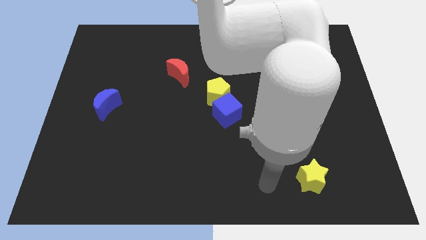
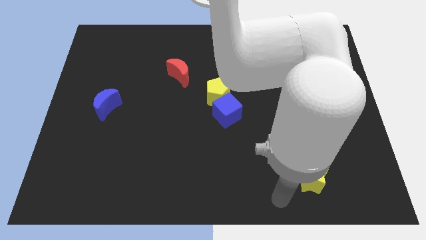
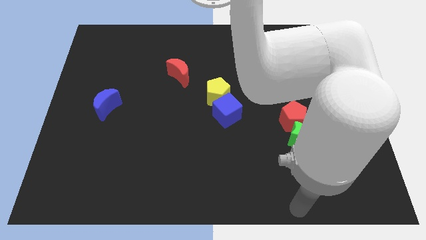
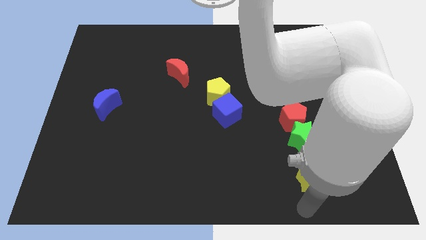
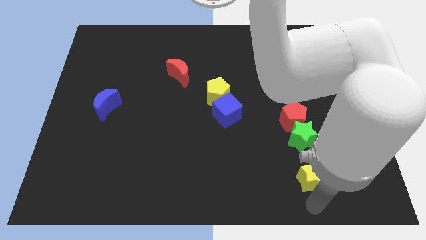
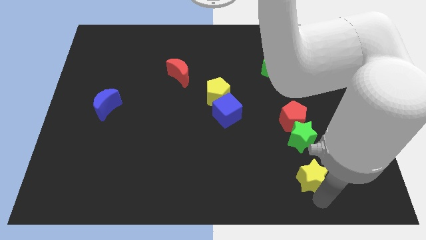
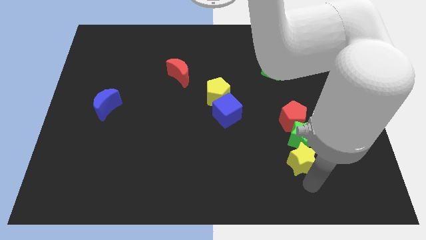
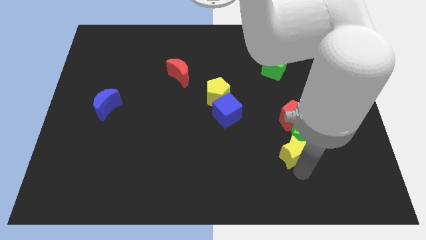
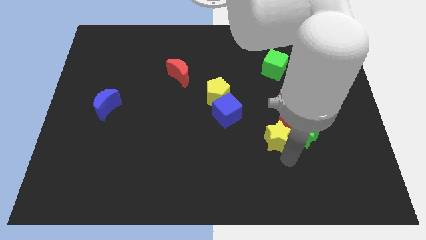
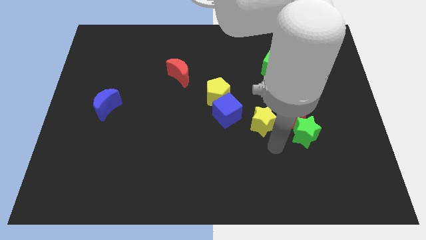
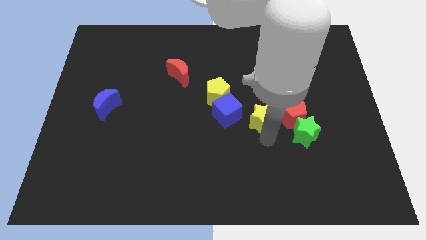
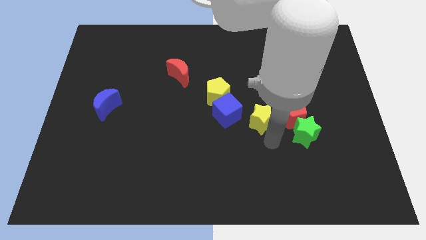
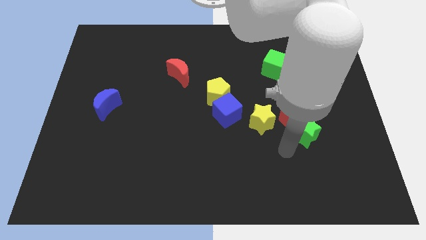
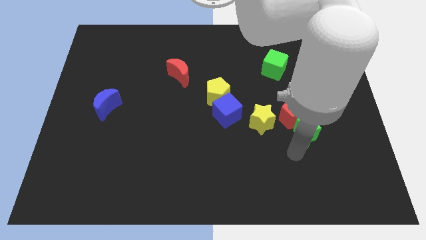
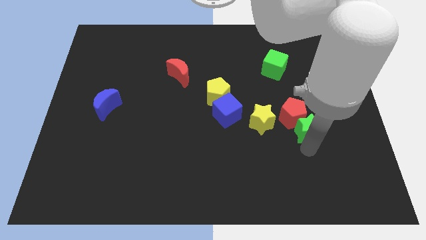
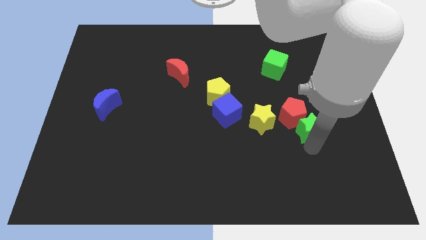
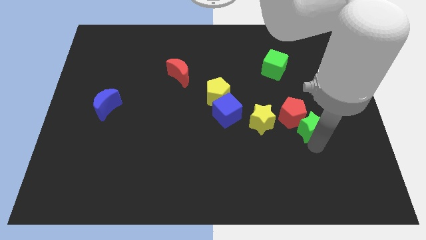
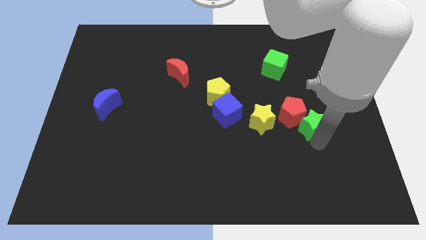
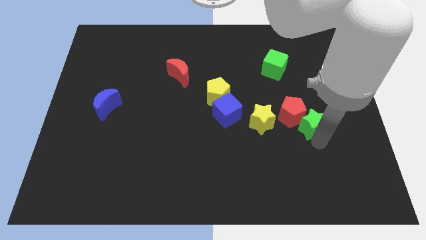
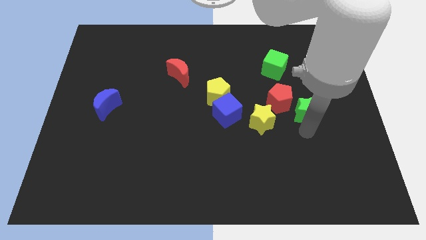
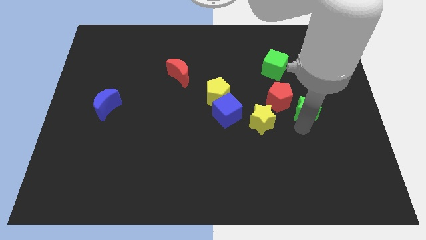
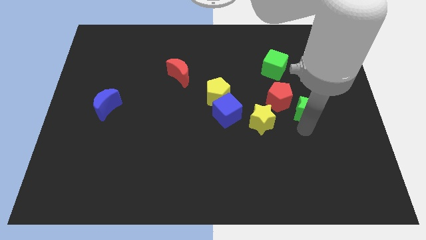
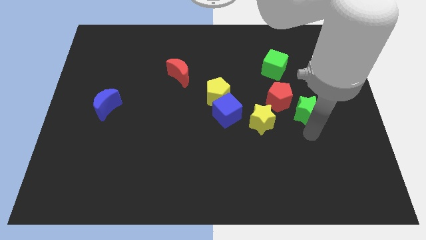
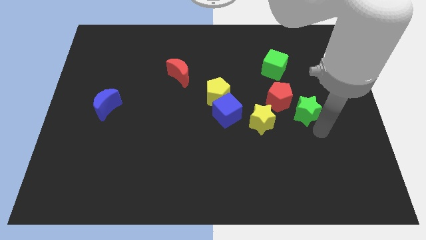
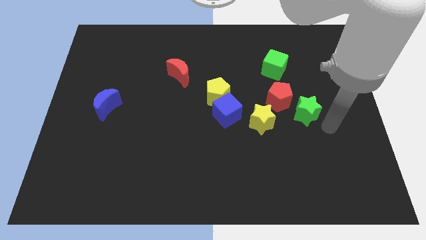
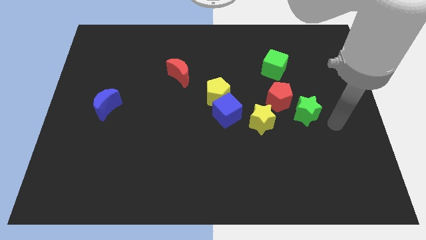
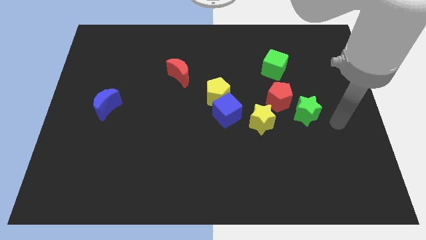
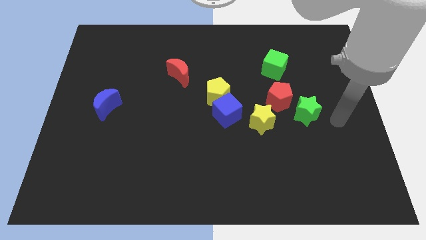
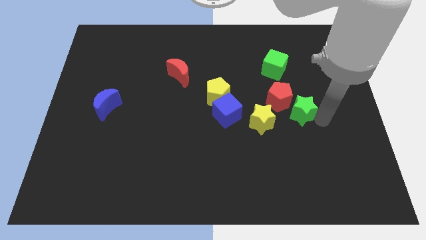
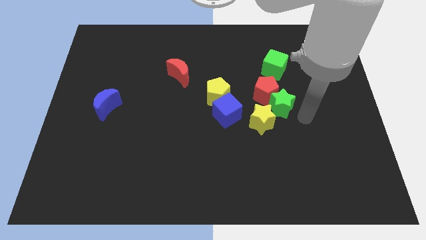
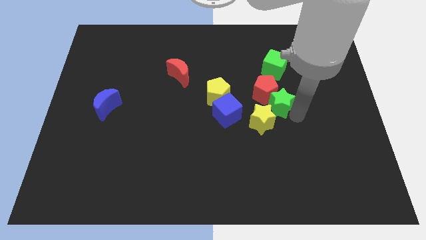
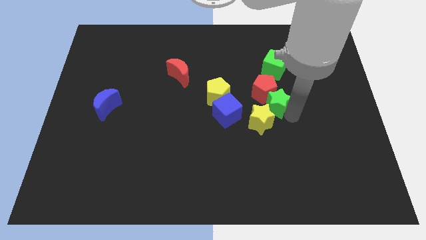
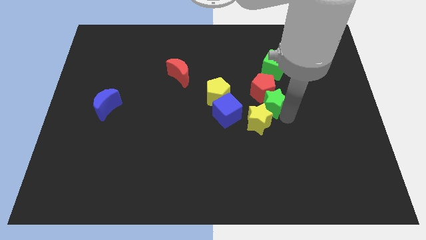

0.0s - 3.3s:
push the yellow star green star and red pentagon to the right side of the yellow pentagon and blue cube

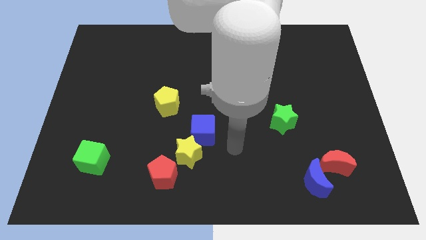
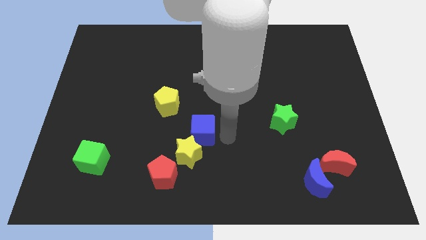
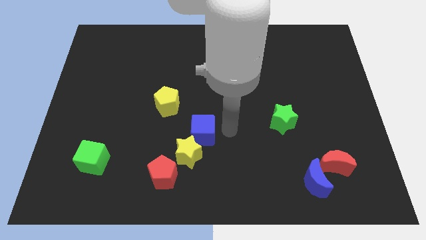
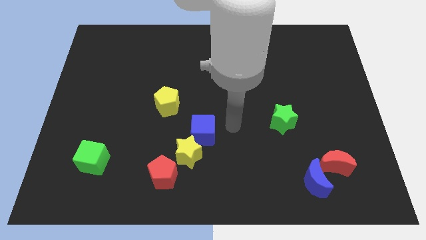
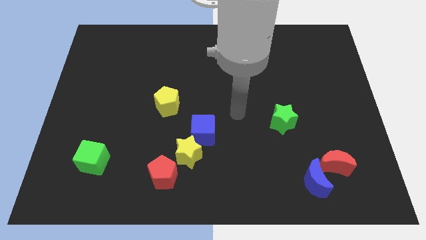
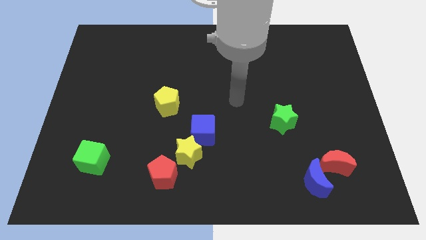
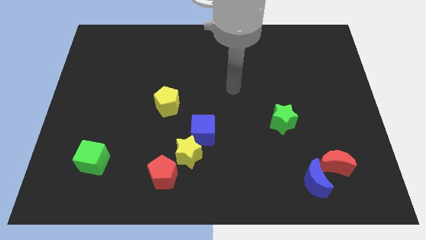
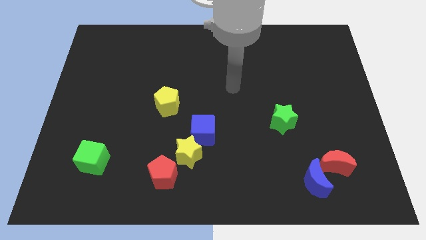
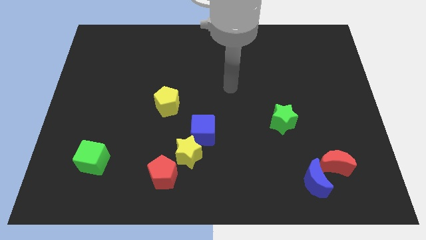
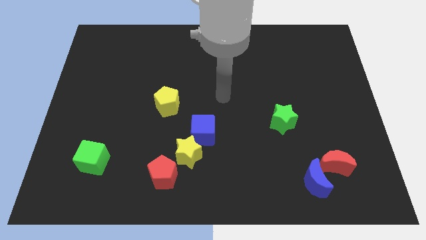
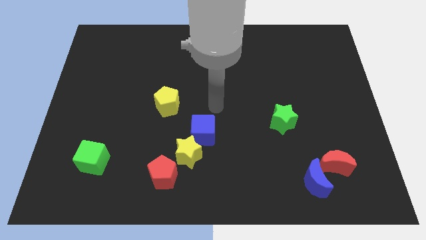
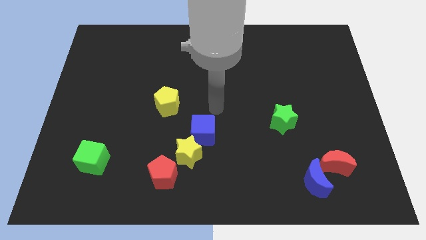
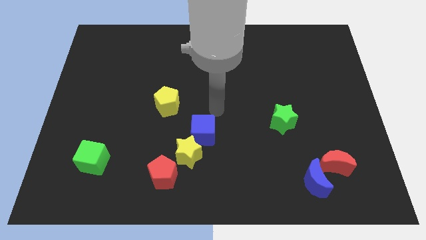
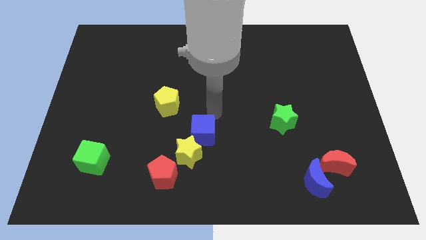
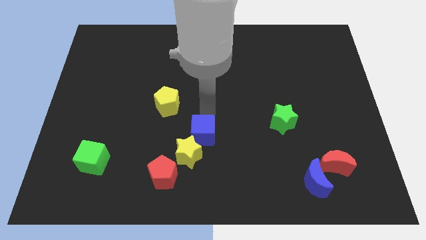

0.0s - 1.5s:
point your arm above the blue cube

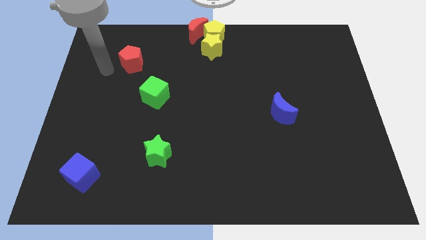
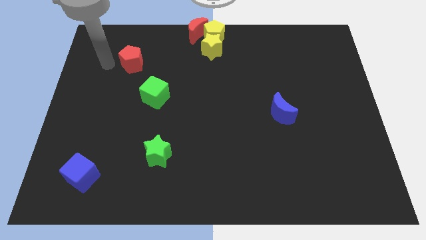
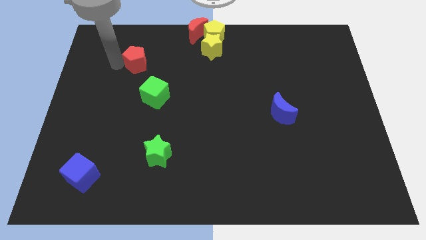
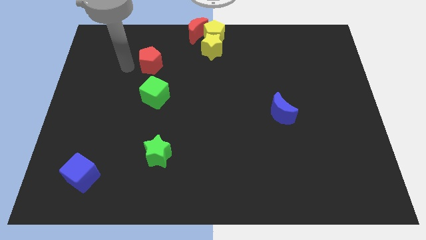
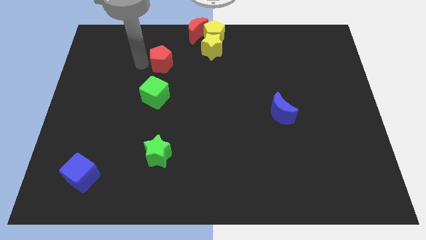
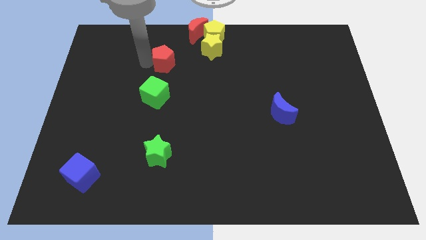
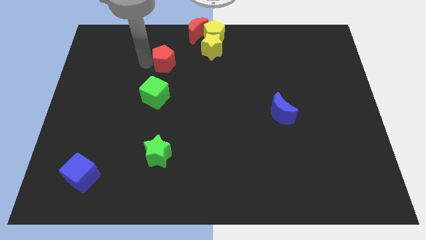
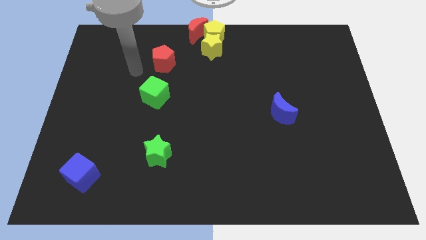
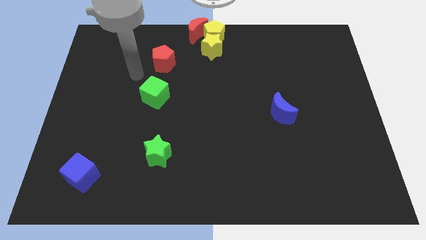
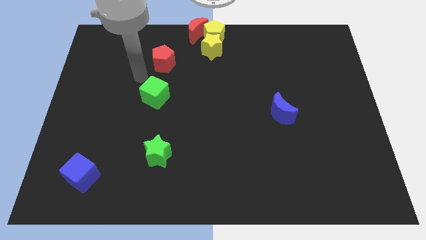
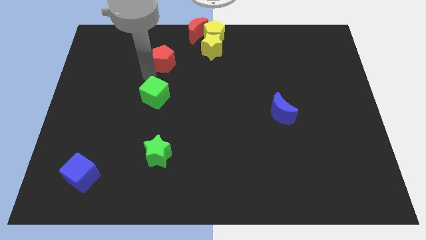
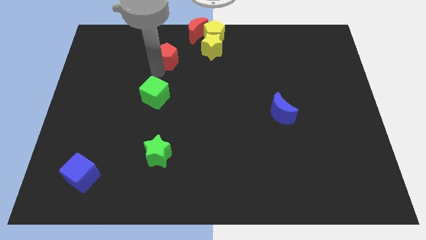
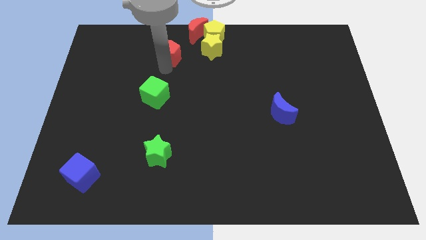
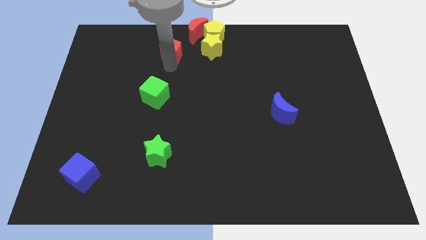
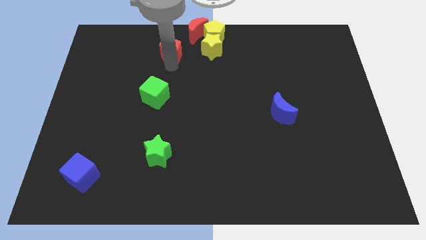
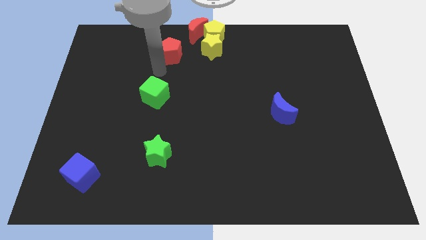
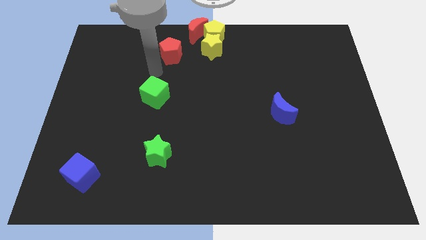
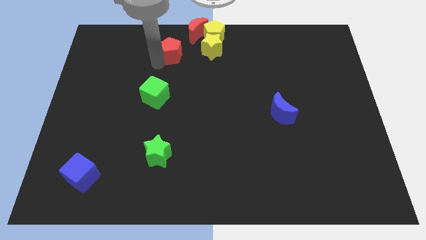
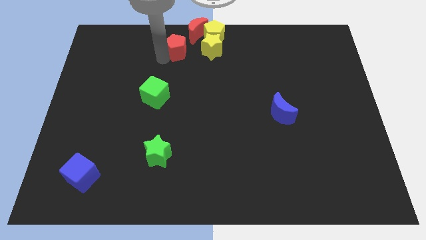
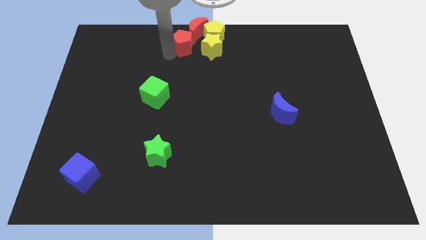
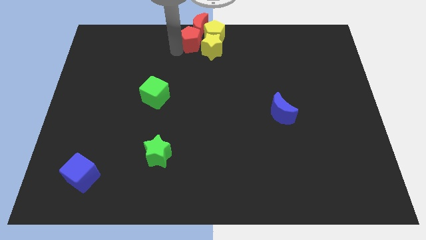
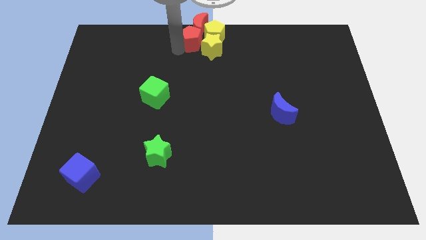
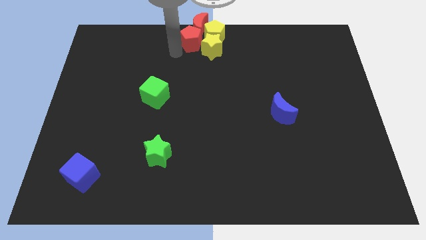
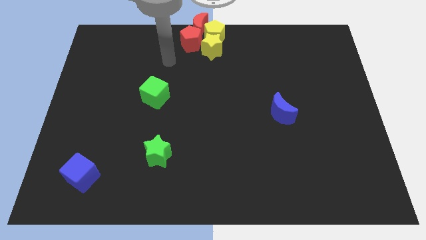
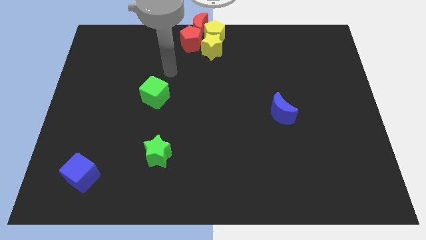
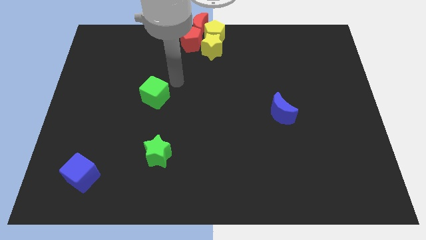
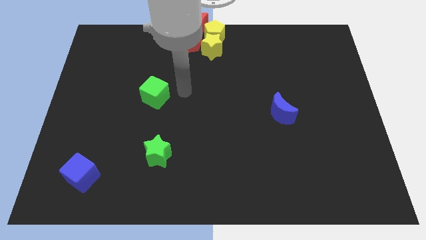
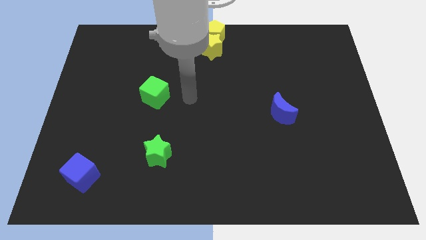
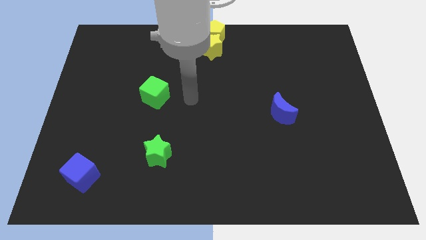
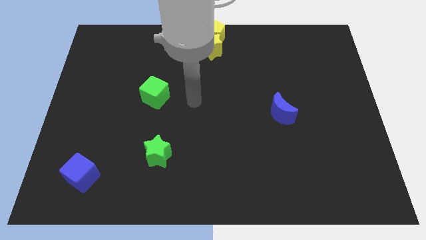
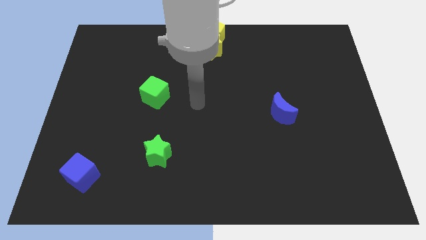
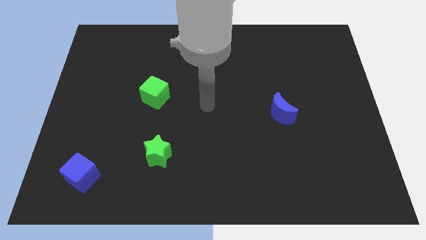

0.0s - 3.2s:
push the red pentagon into a group of blocks

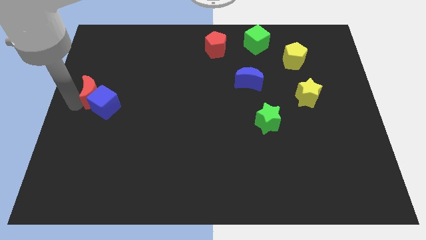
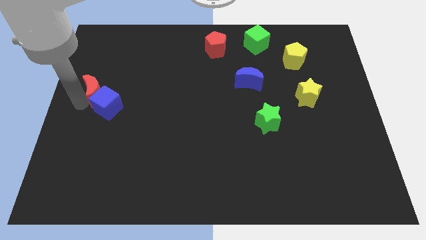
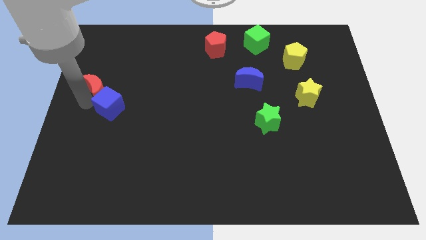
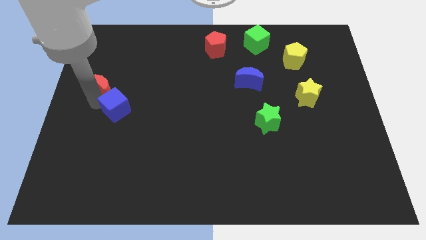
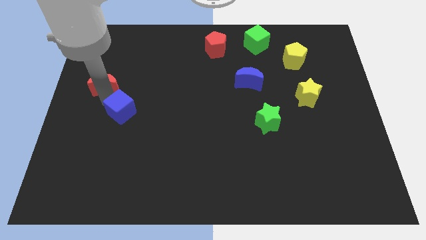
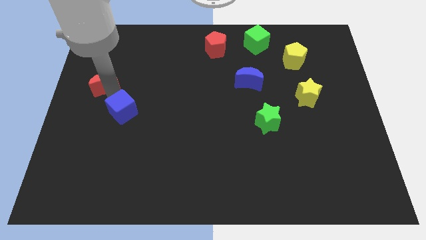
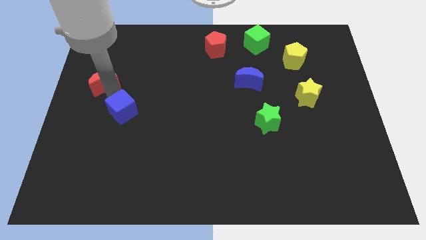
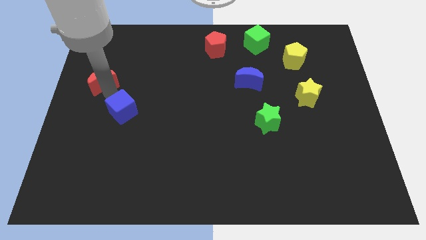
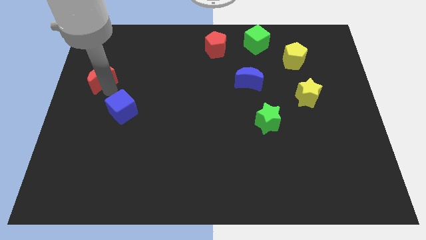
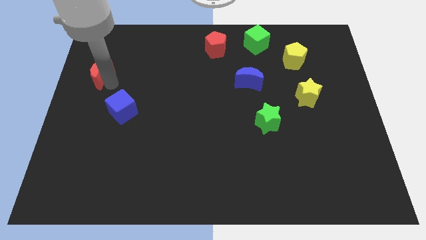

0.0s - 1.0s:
point your arm between red moon and blue cube
